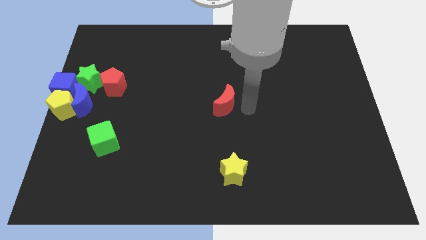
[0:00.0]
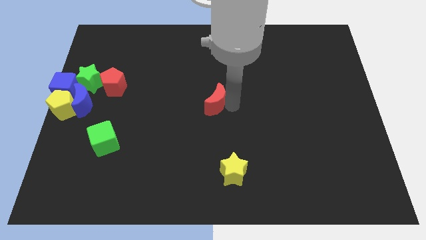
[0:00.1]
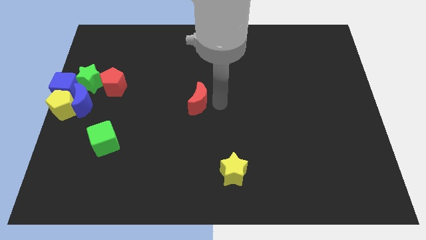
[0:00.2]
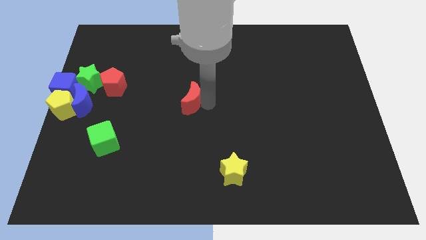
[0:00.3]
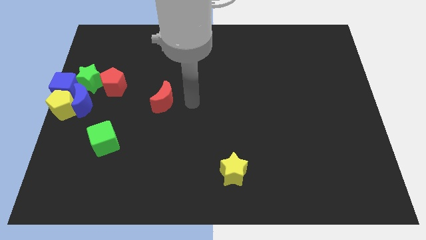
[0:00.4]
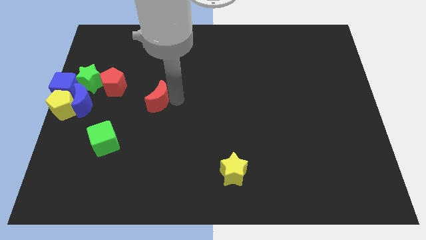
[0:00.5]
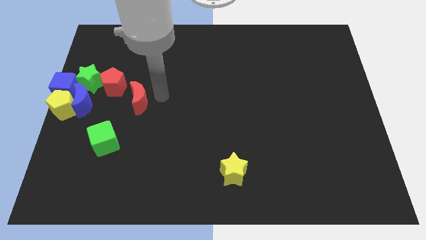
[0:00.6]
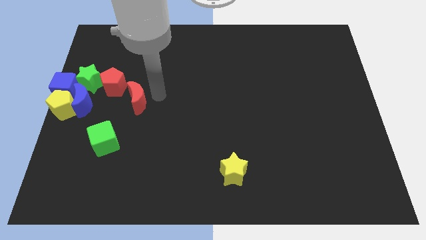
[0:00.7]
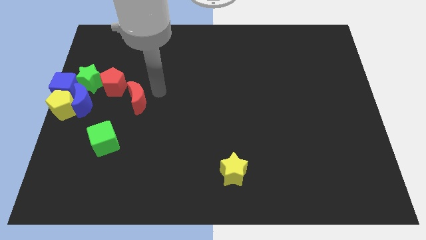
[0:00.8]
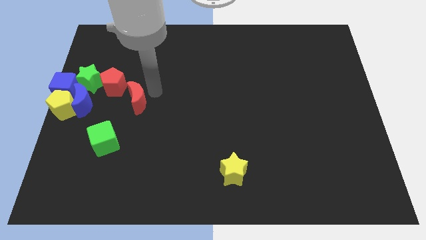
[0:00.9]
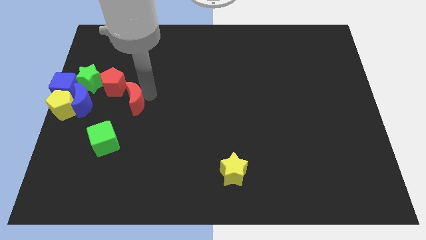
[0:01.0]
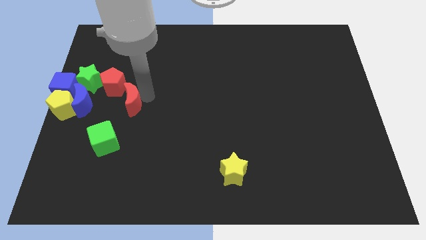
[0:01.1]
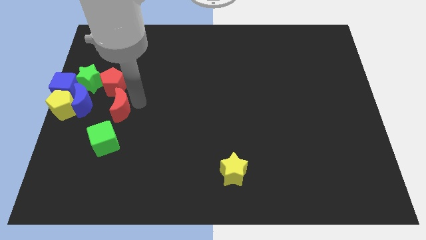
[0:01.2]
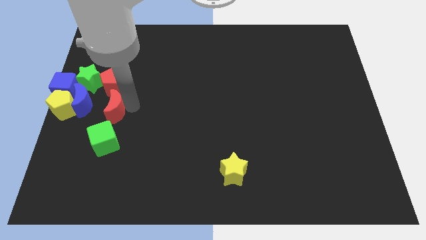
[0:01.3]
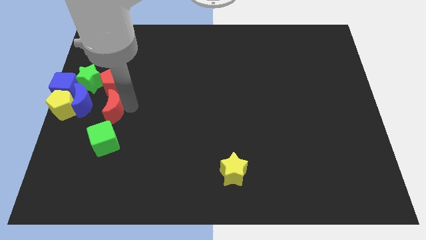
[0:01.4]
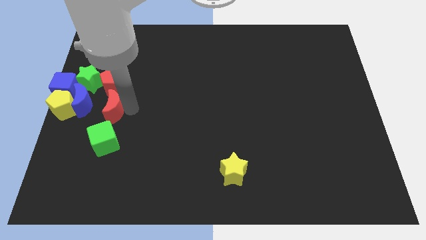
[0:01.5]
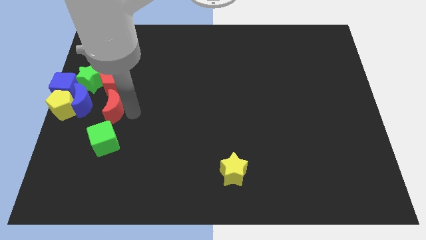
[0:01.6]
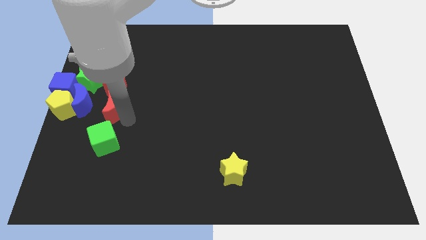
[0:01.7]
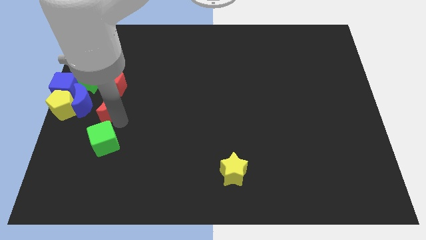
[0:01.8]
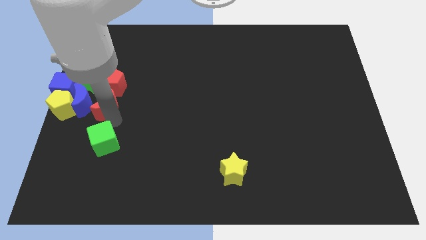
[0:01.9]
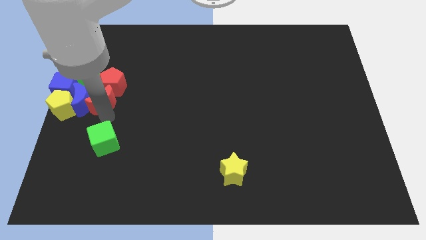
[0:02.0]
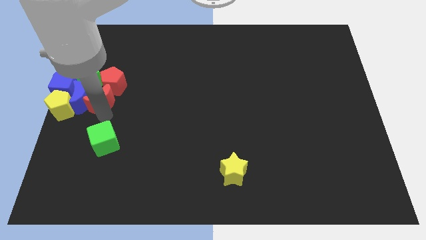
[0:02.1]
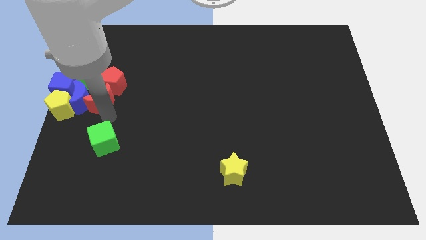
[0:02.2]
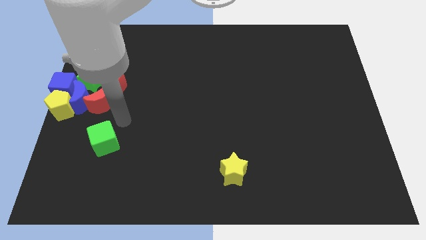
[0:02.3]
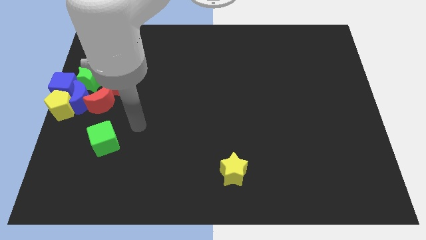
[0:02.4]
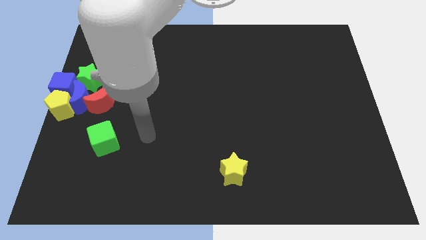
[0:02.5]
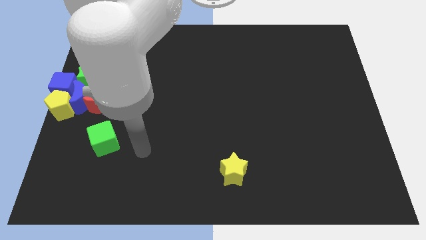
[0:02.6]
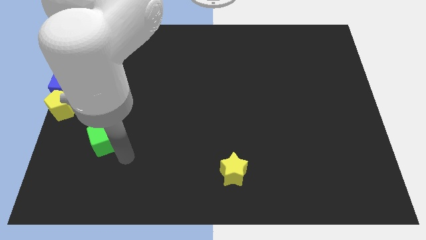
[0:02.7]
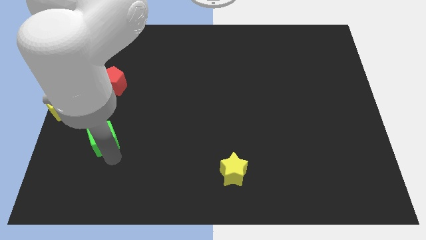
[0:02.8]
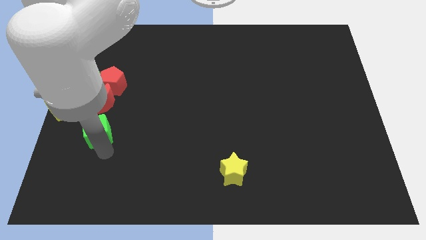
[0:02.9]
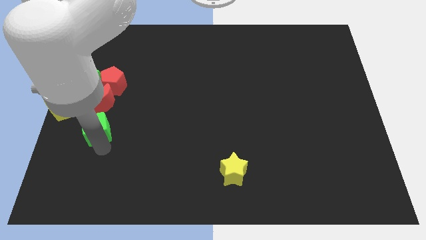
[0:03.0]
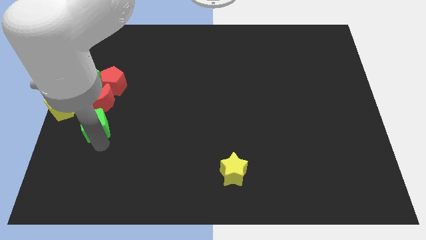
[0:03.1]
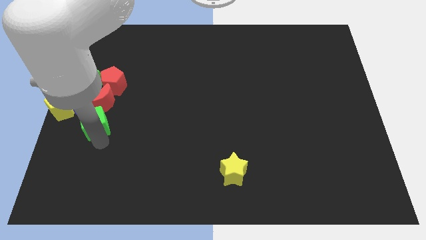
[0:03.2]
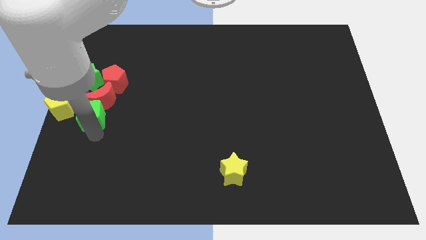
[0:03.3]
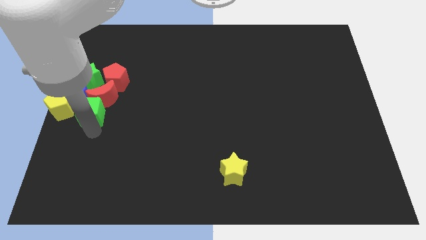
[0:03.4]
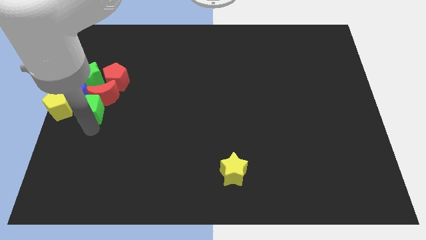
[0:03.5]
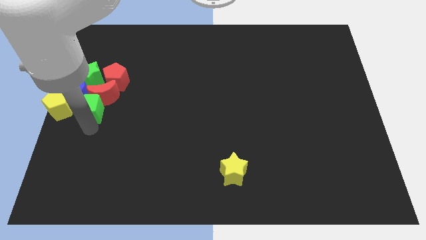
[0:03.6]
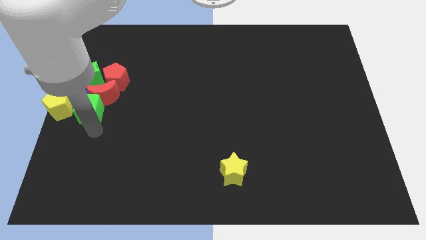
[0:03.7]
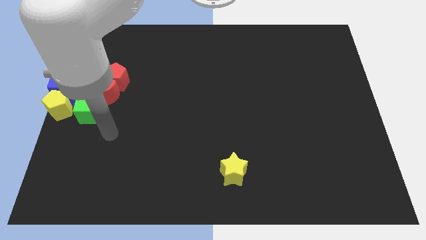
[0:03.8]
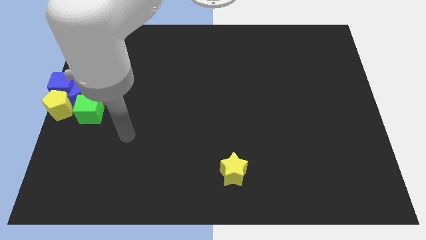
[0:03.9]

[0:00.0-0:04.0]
move green cube and the red moon into the group of blocks

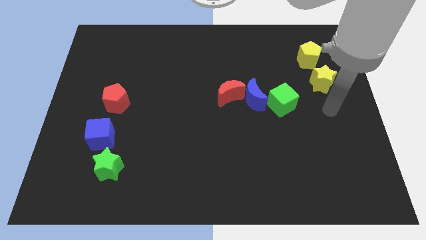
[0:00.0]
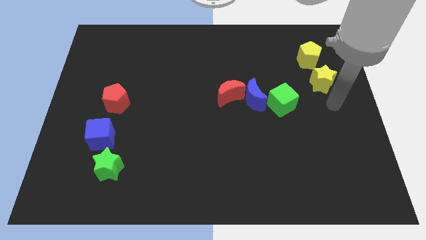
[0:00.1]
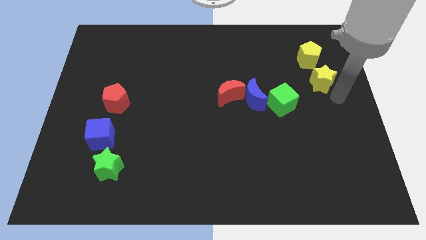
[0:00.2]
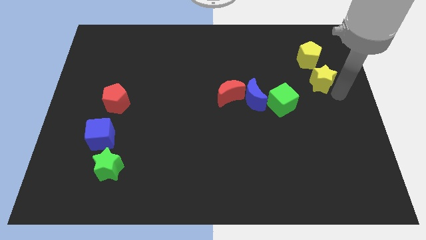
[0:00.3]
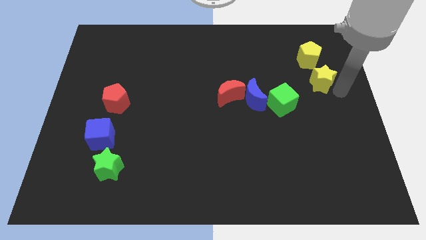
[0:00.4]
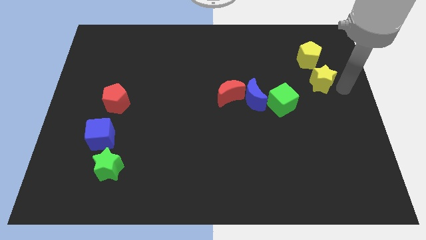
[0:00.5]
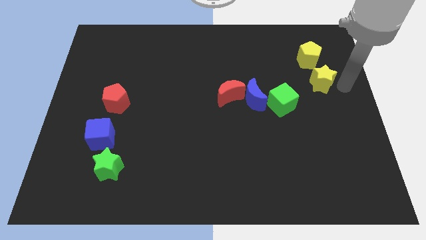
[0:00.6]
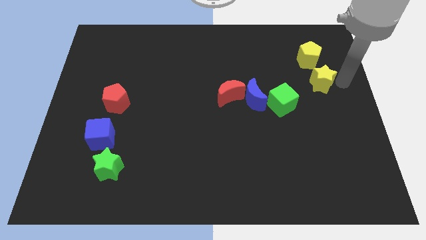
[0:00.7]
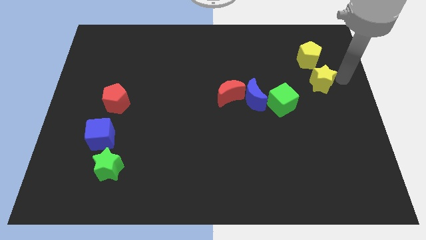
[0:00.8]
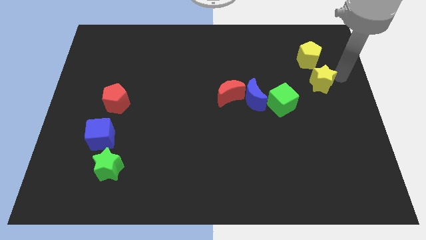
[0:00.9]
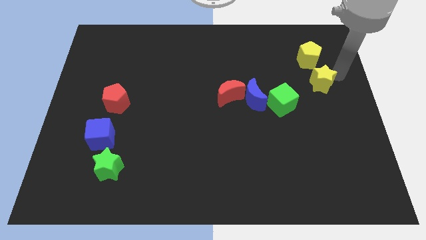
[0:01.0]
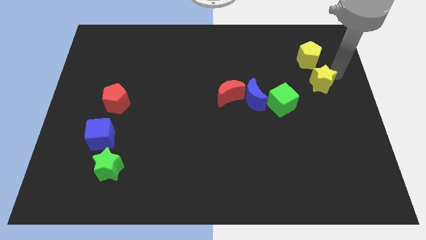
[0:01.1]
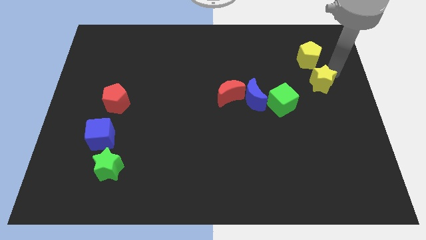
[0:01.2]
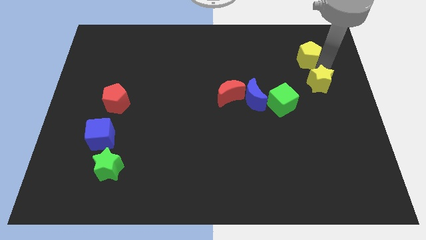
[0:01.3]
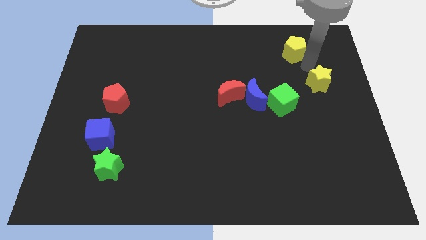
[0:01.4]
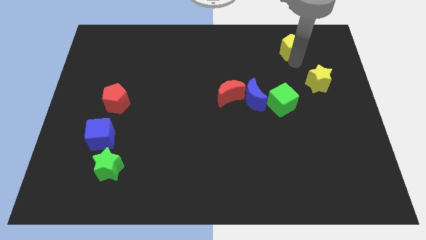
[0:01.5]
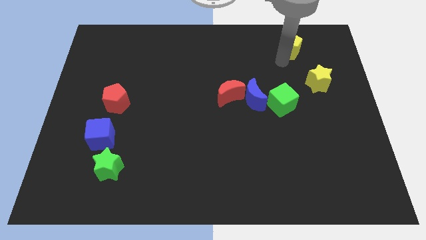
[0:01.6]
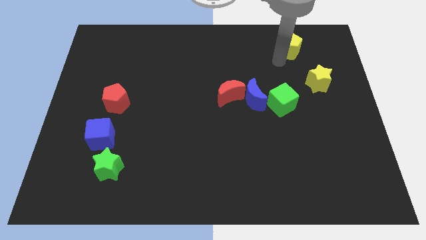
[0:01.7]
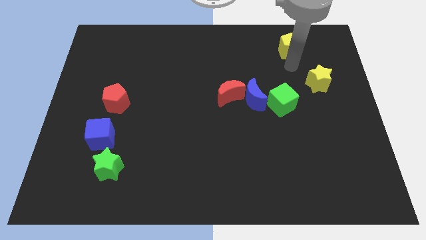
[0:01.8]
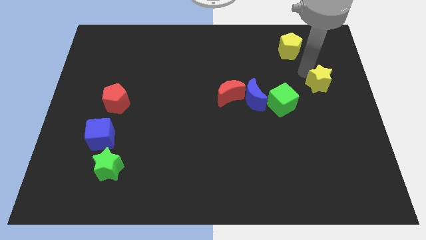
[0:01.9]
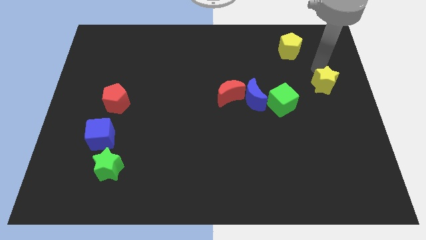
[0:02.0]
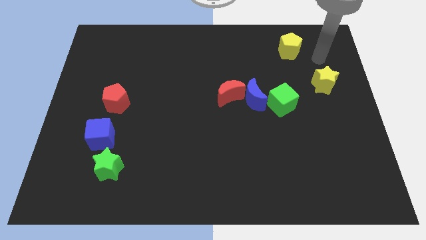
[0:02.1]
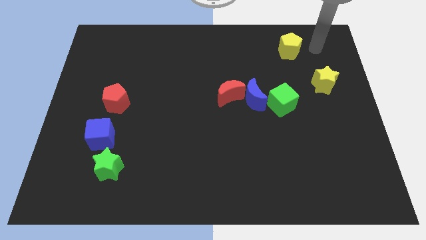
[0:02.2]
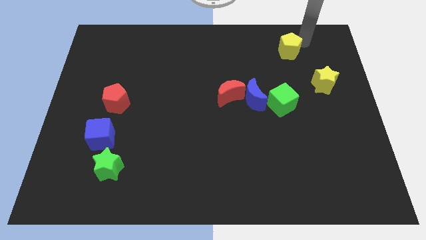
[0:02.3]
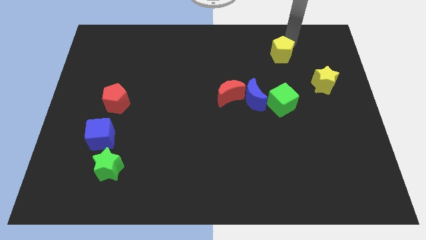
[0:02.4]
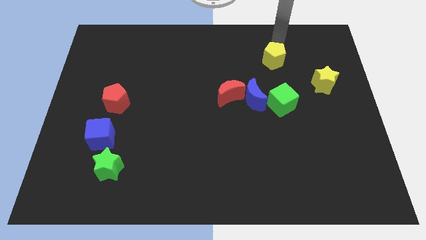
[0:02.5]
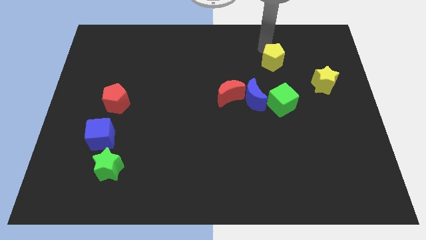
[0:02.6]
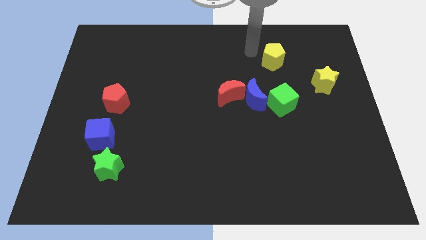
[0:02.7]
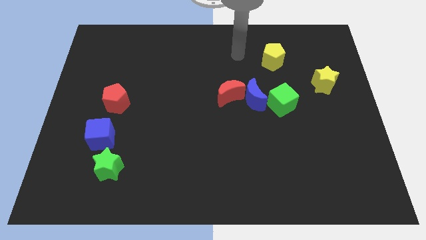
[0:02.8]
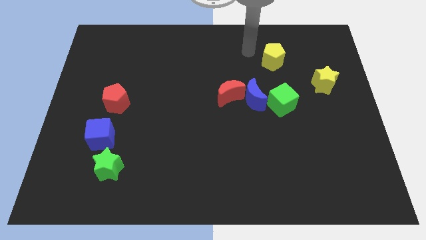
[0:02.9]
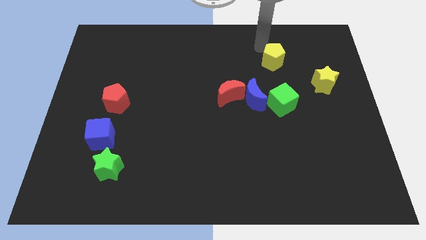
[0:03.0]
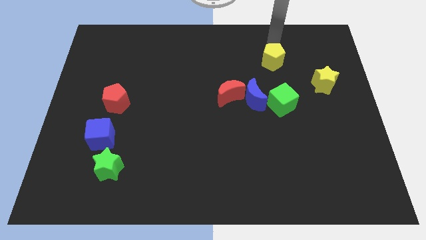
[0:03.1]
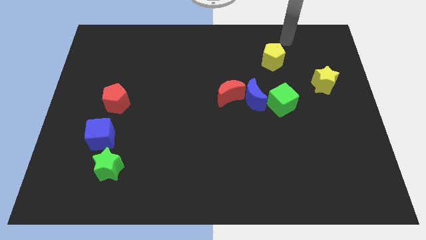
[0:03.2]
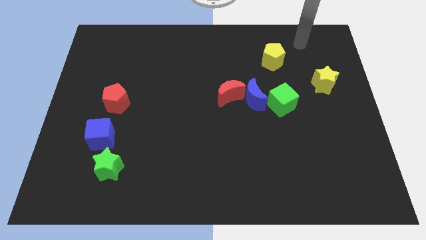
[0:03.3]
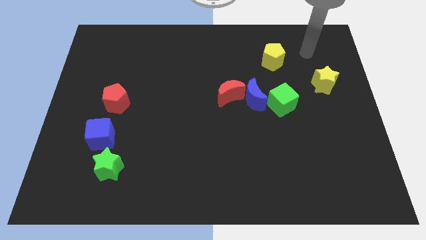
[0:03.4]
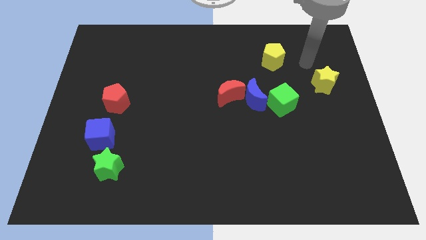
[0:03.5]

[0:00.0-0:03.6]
separate the yellow pentagon and yellow star

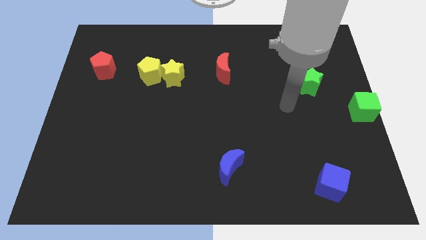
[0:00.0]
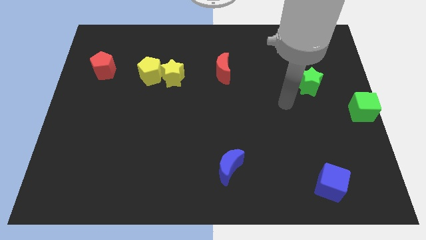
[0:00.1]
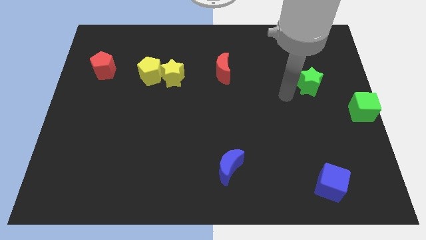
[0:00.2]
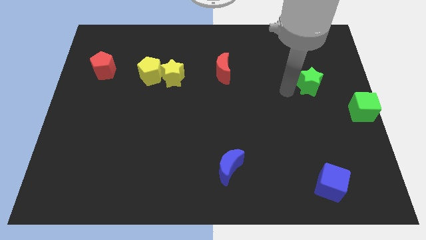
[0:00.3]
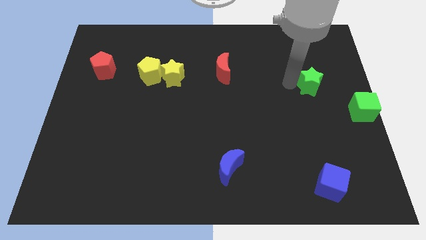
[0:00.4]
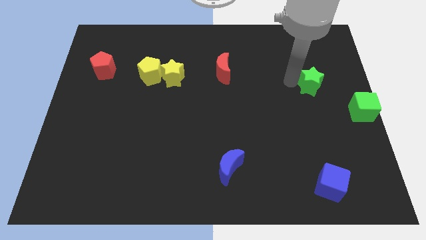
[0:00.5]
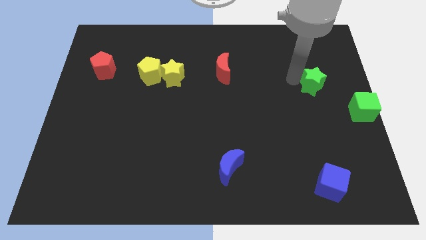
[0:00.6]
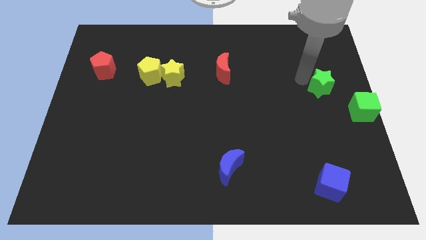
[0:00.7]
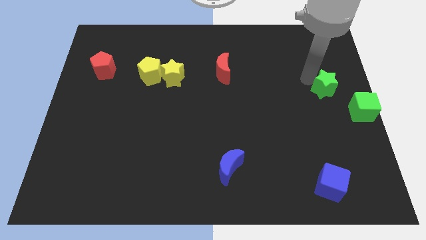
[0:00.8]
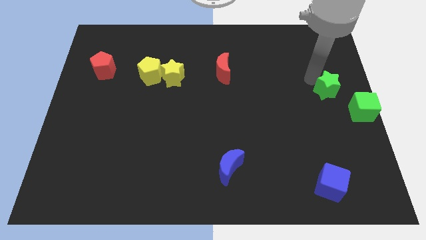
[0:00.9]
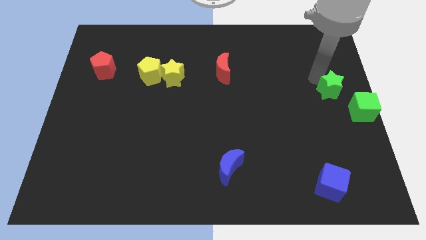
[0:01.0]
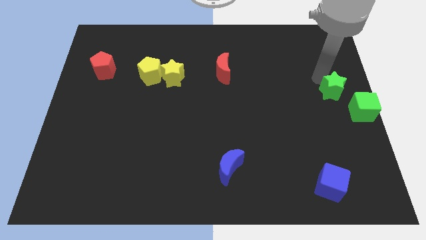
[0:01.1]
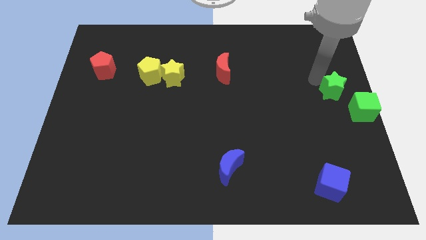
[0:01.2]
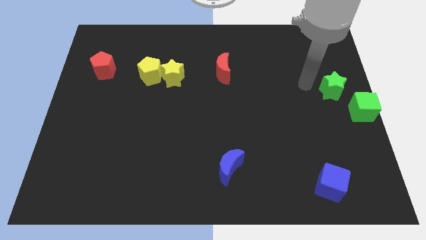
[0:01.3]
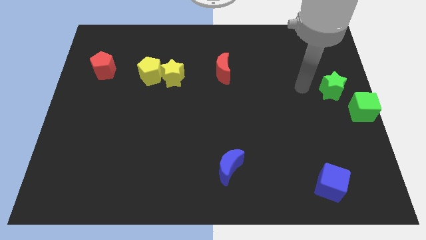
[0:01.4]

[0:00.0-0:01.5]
move green star close to the green cube
